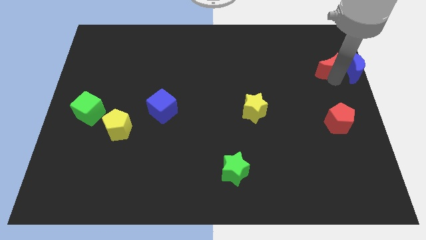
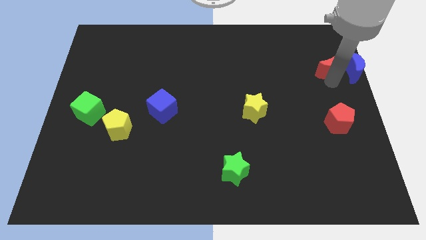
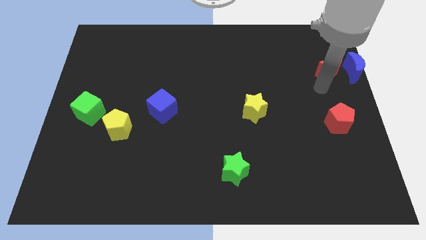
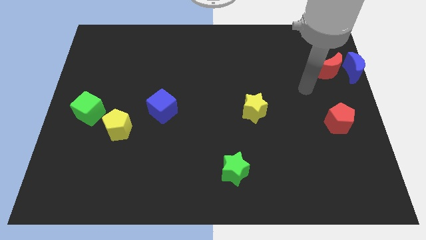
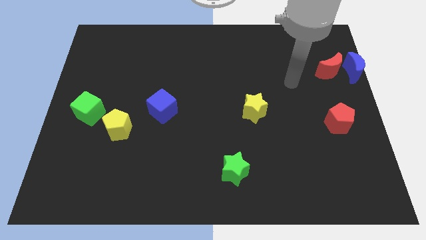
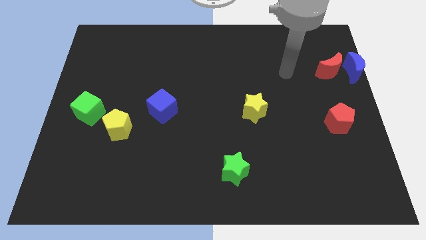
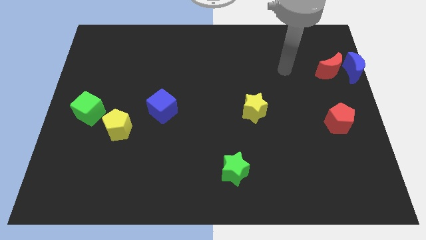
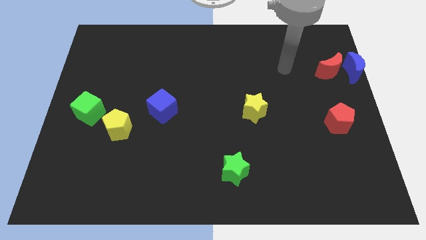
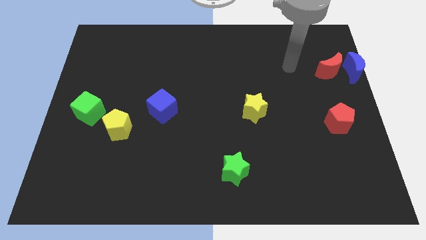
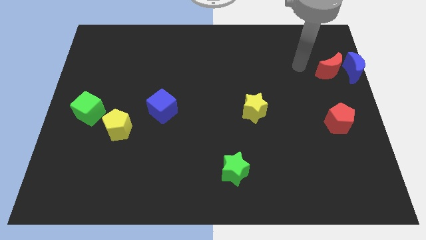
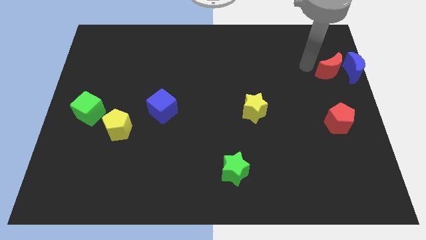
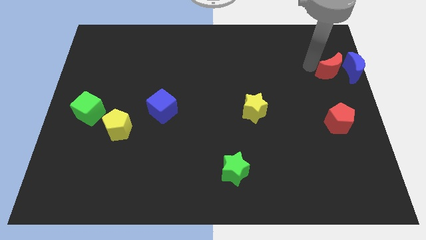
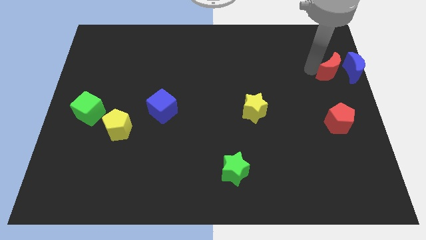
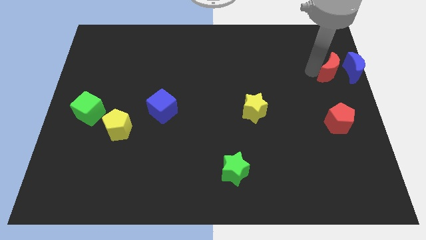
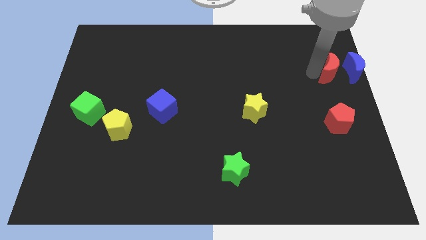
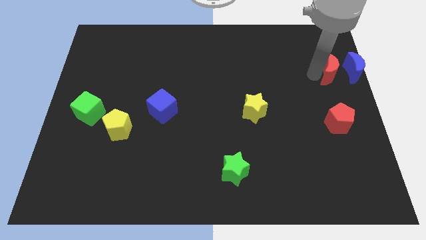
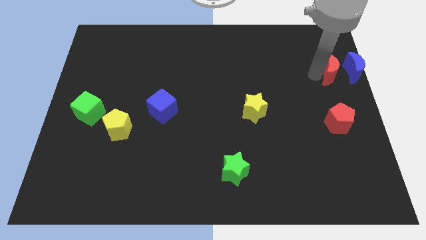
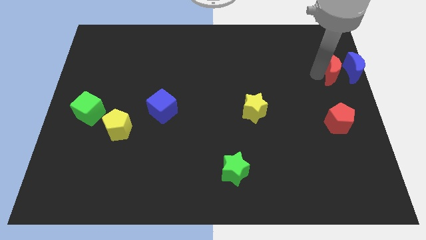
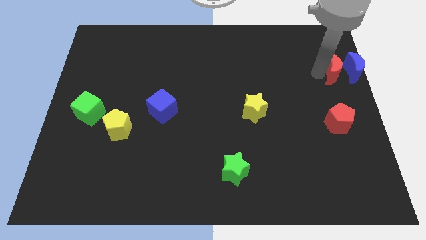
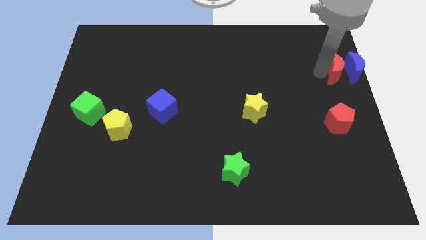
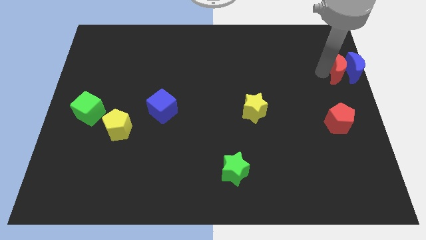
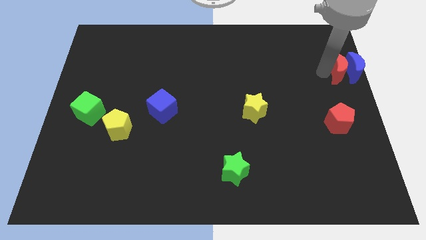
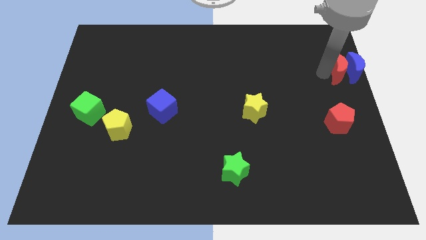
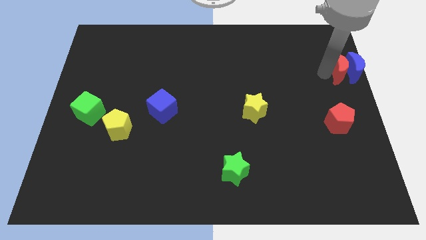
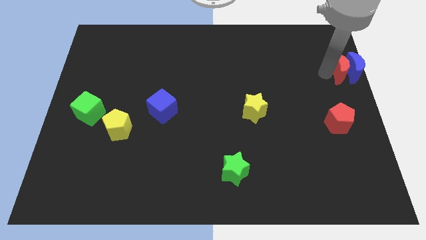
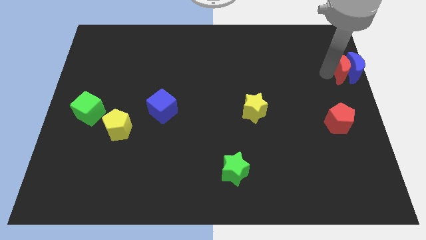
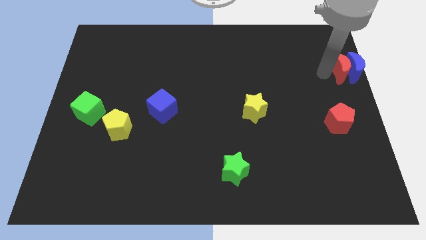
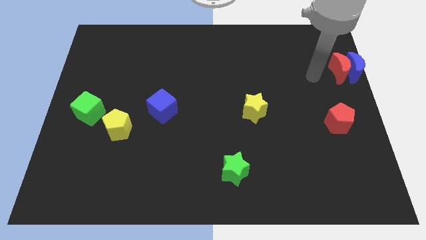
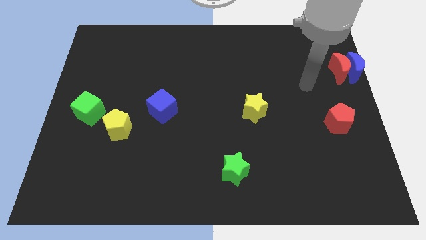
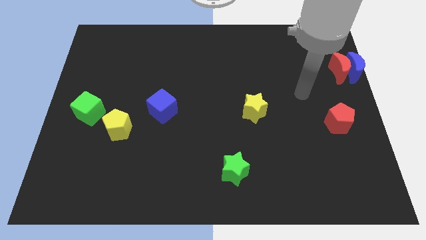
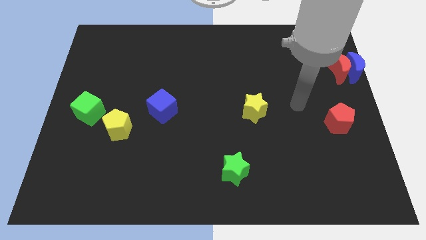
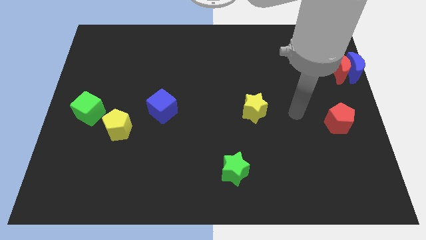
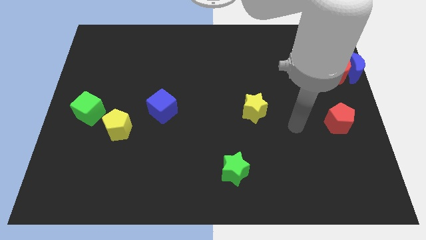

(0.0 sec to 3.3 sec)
move the red crescent close to the blue crescent and go away

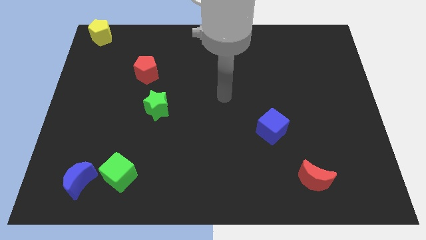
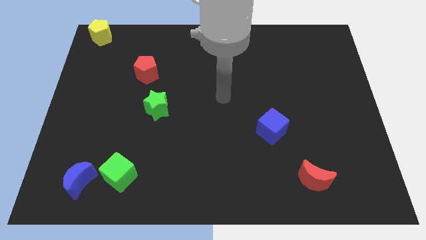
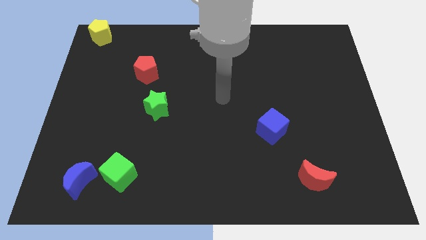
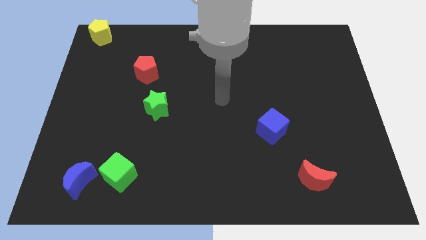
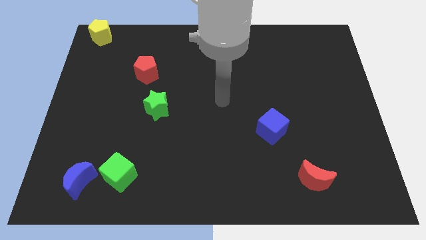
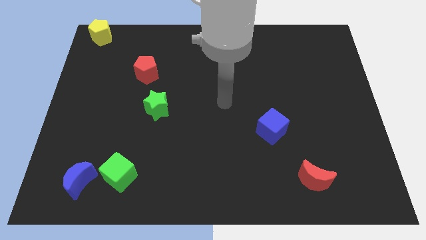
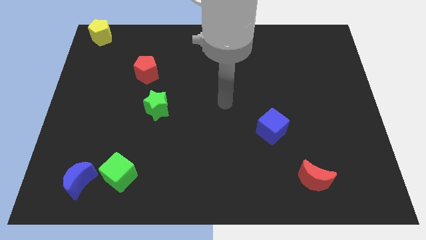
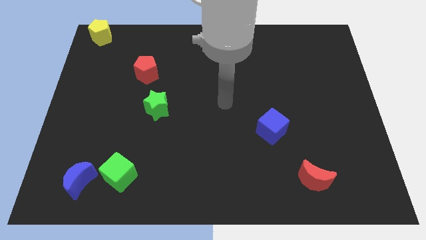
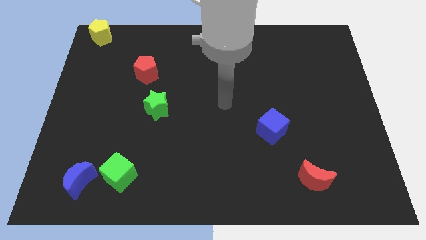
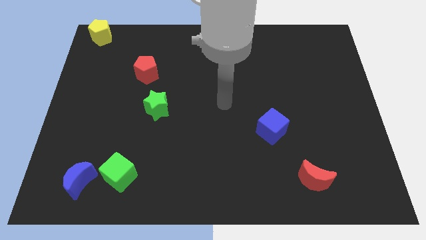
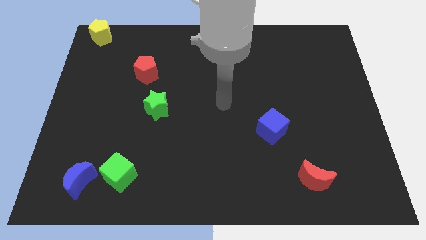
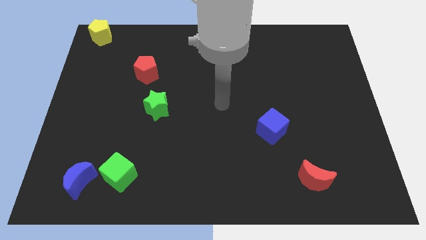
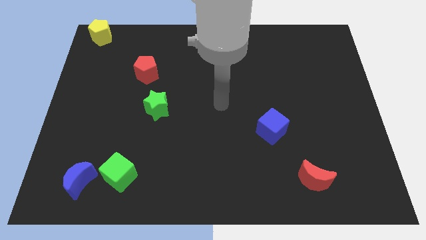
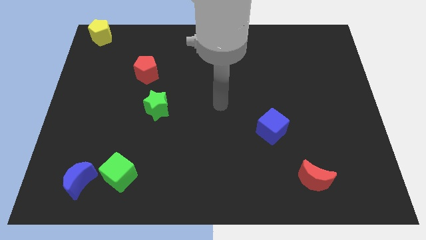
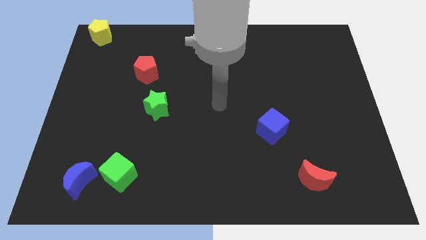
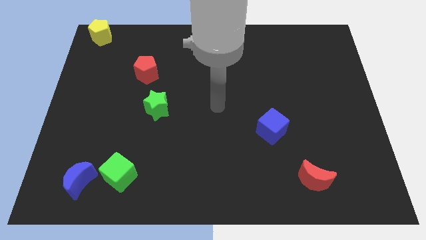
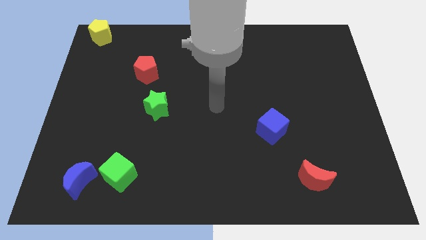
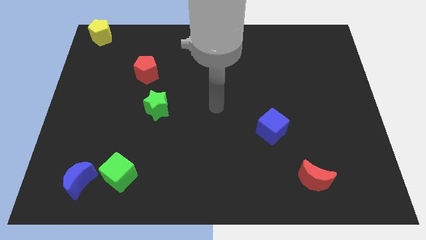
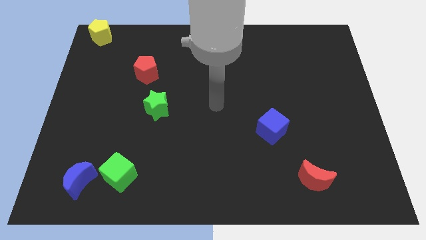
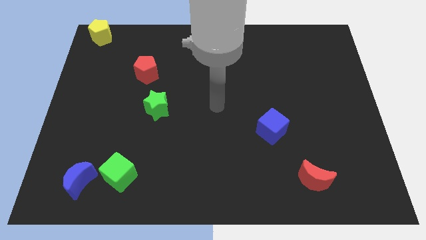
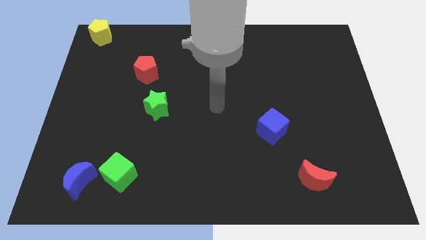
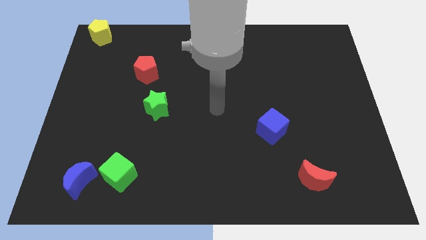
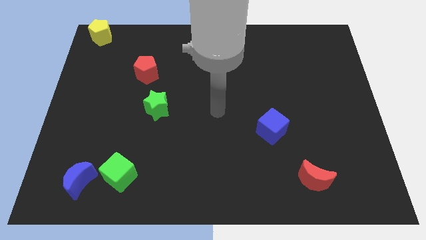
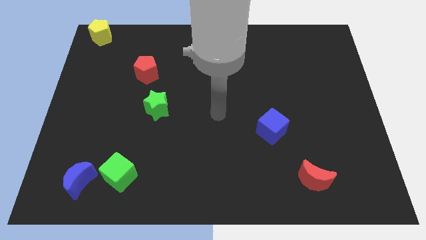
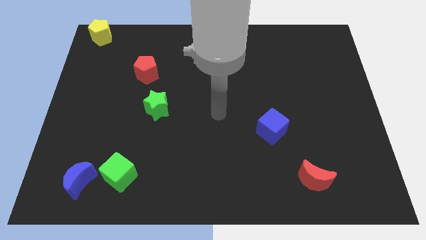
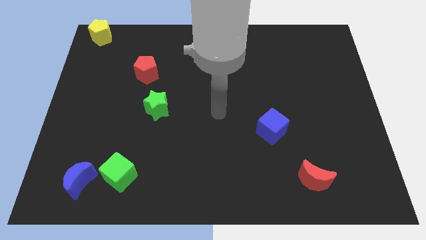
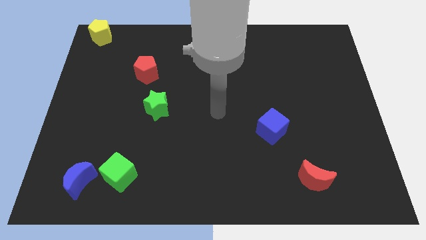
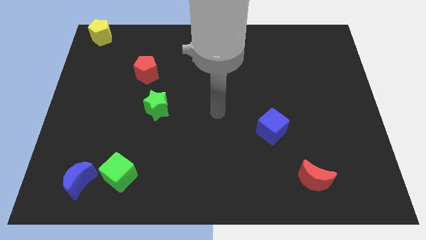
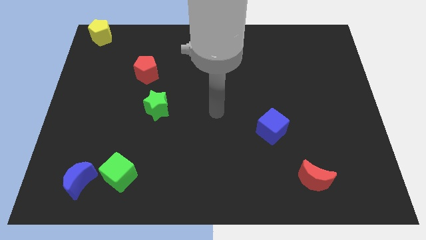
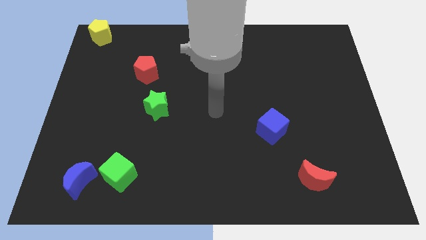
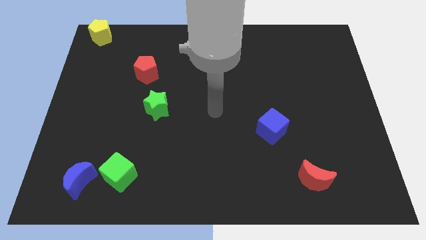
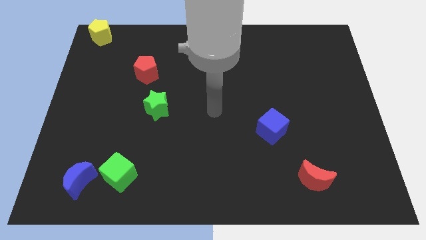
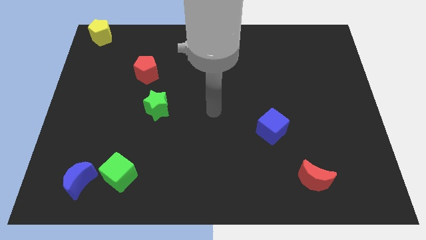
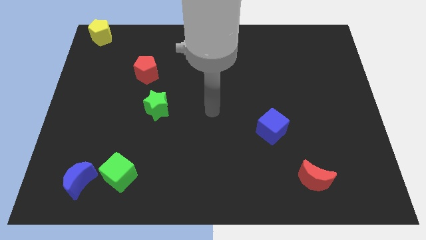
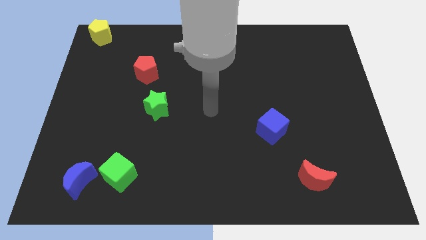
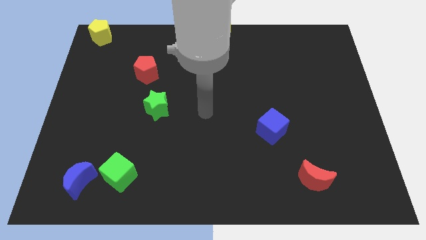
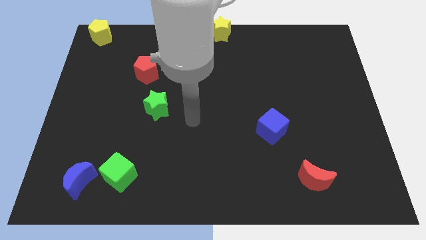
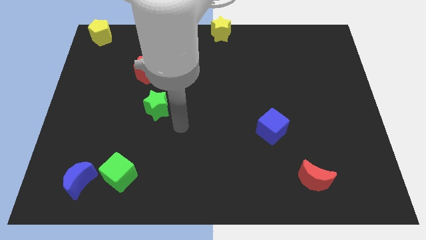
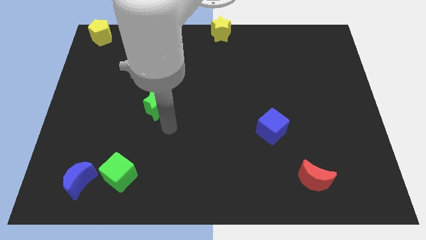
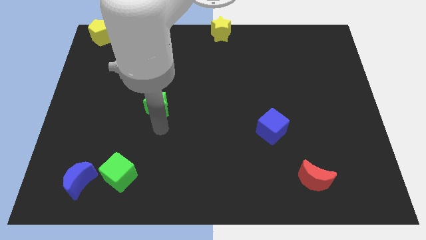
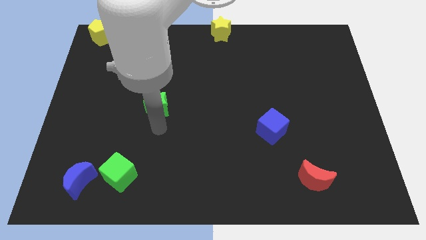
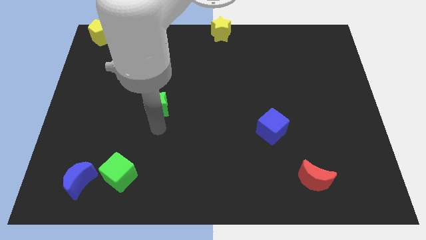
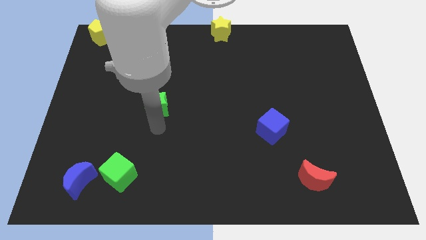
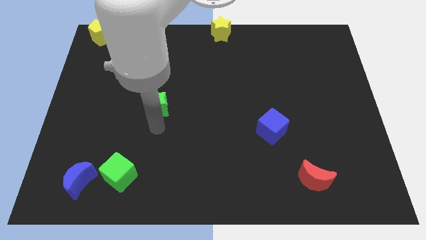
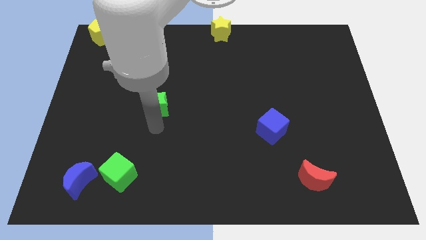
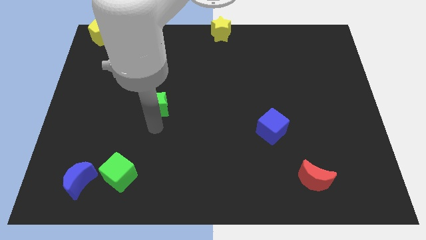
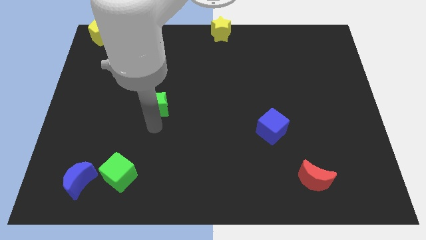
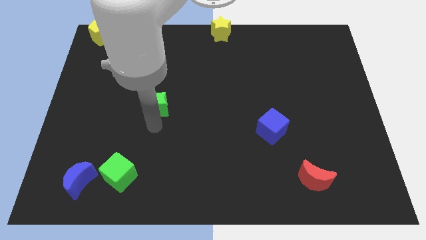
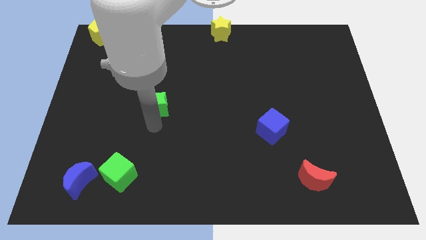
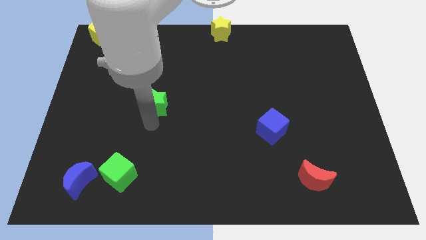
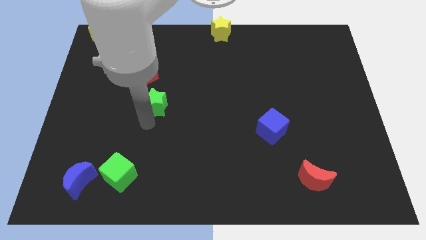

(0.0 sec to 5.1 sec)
move the arm towards the green star

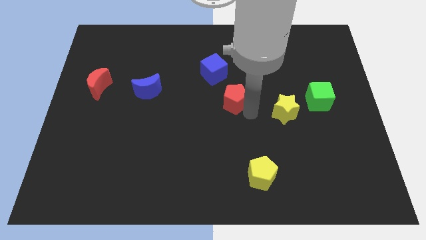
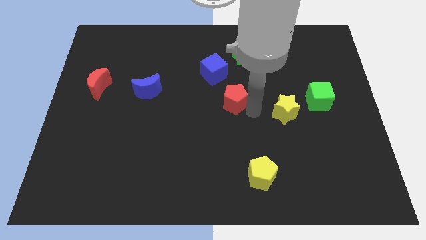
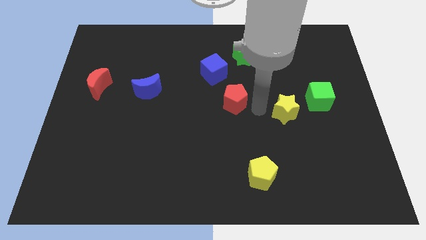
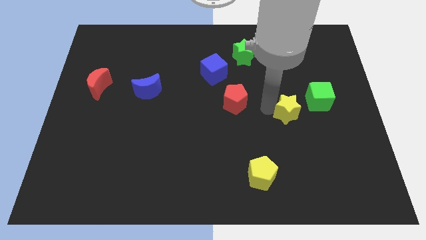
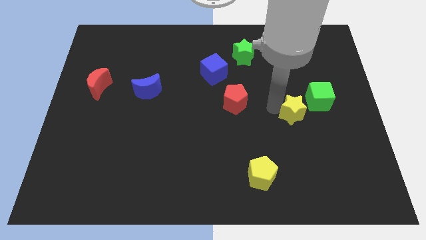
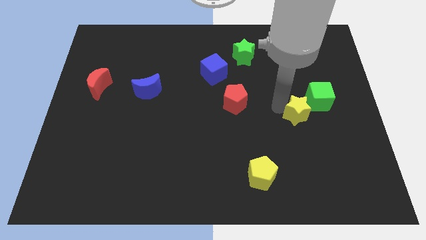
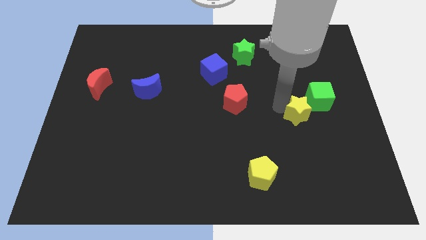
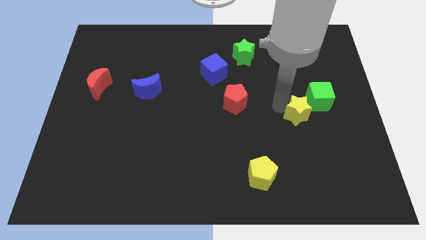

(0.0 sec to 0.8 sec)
slightly move yellow star to the right
